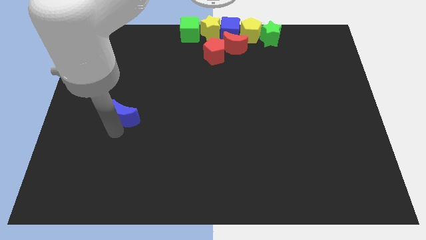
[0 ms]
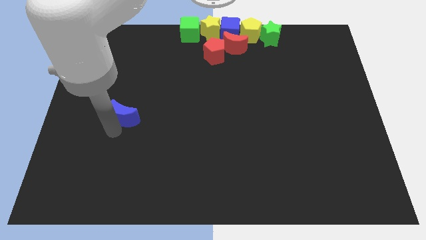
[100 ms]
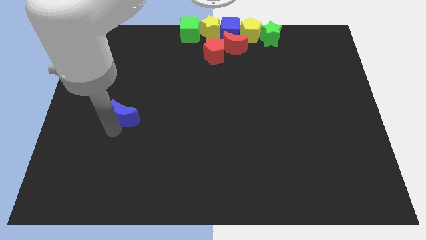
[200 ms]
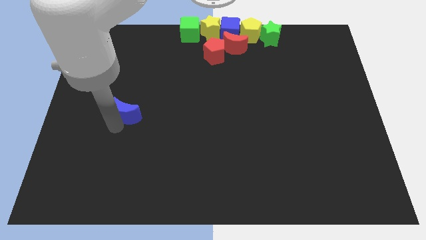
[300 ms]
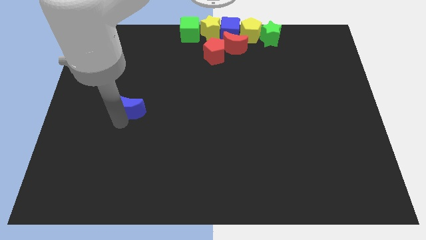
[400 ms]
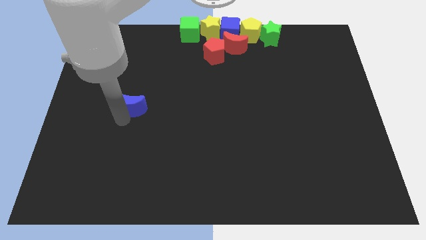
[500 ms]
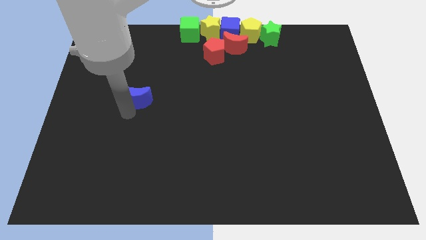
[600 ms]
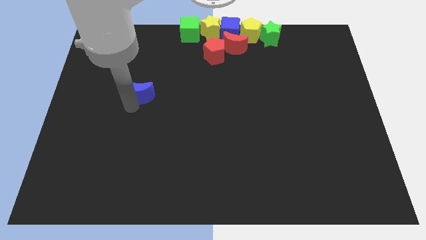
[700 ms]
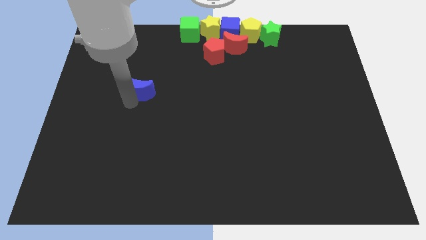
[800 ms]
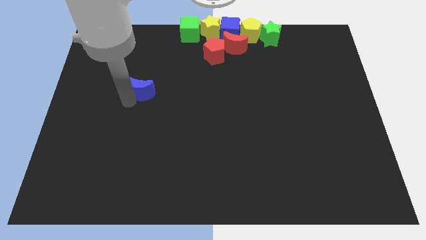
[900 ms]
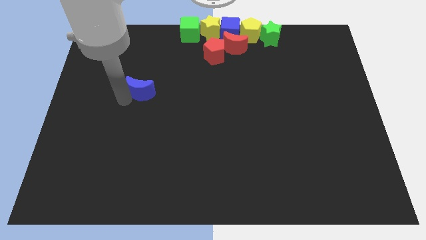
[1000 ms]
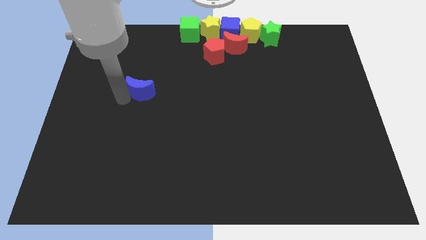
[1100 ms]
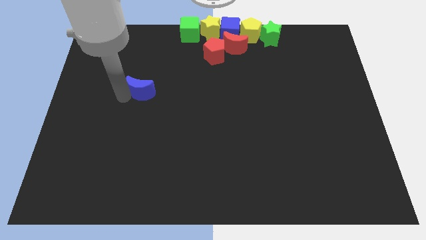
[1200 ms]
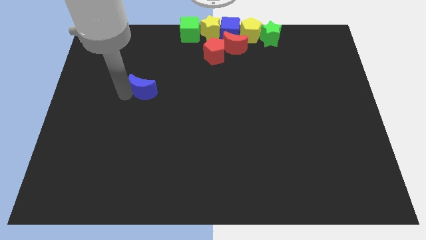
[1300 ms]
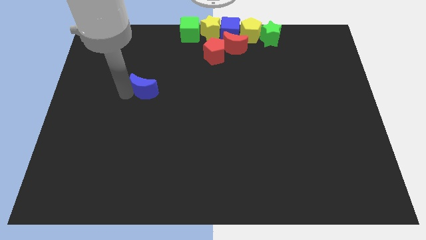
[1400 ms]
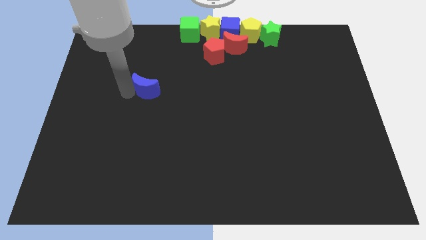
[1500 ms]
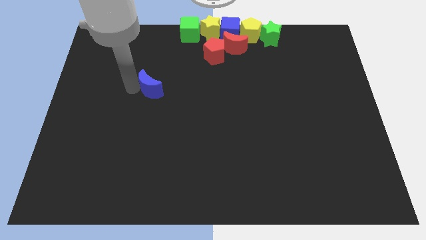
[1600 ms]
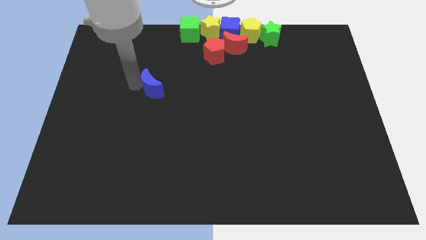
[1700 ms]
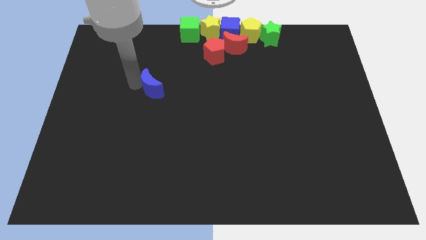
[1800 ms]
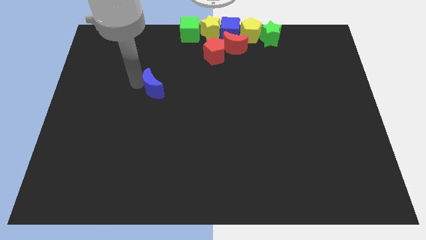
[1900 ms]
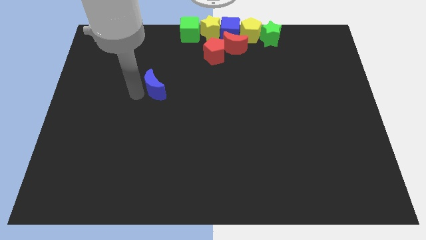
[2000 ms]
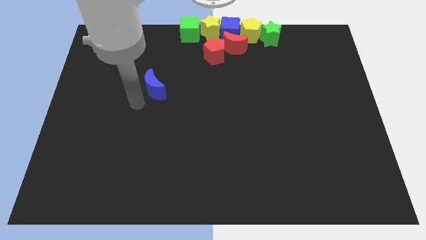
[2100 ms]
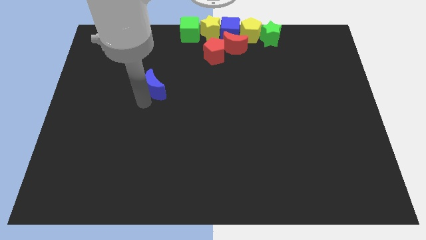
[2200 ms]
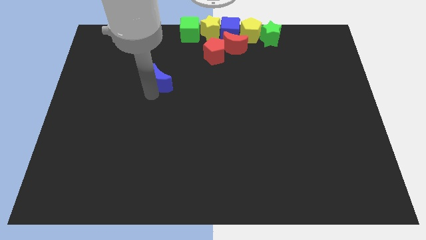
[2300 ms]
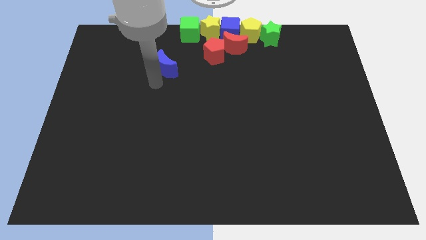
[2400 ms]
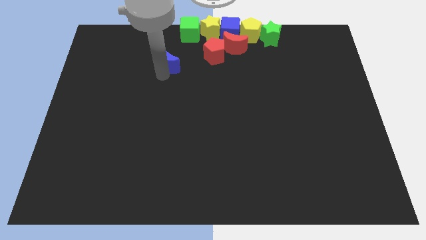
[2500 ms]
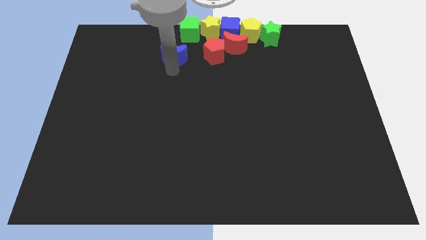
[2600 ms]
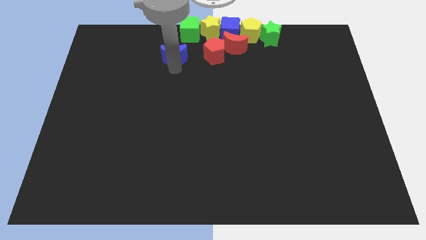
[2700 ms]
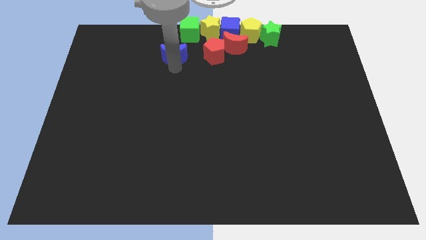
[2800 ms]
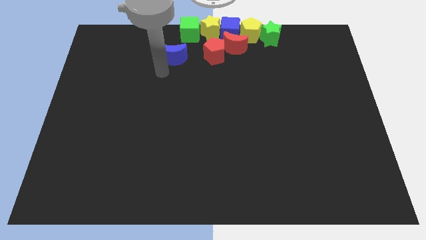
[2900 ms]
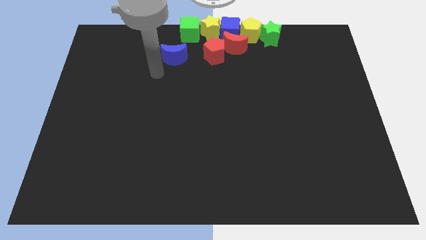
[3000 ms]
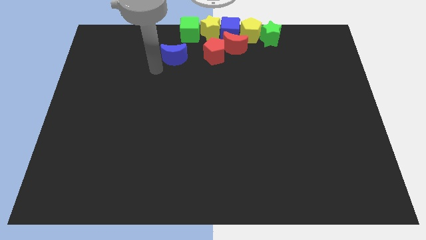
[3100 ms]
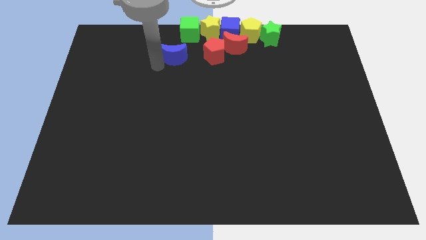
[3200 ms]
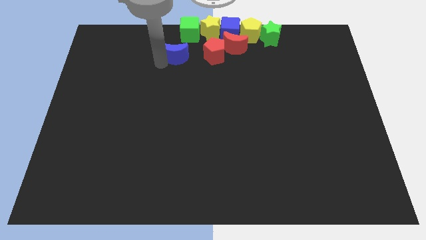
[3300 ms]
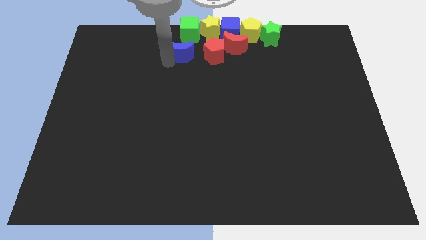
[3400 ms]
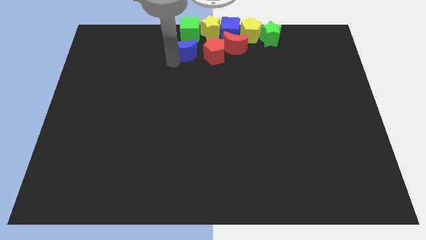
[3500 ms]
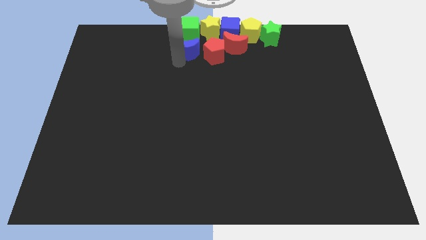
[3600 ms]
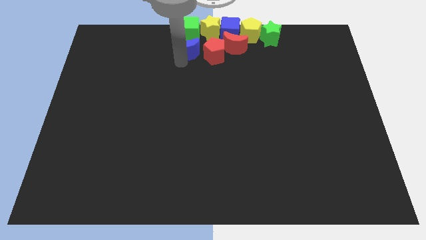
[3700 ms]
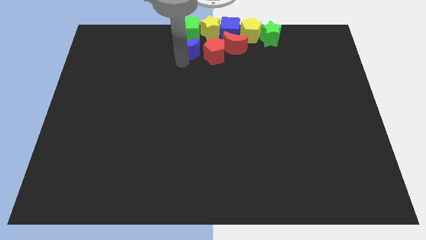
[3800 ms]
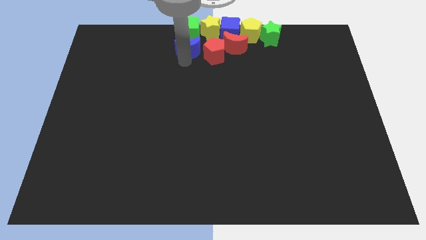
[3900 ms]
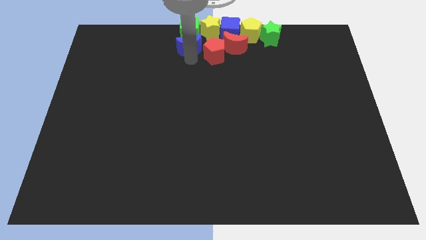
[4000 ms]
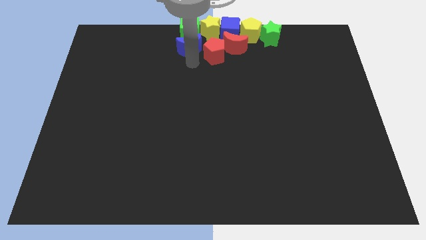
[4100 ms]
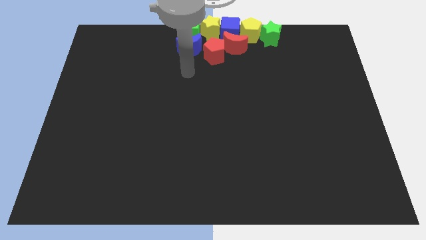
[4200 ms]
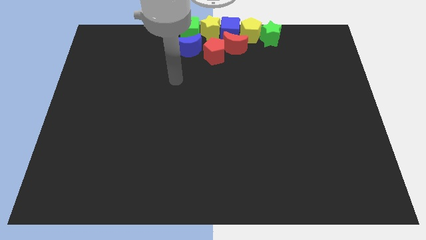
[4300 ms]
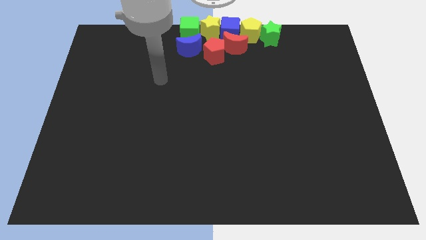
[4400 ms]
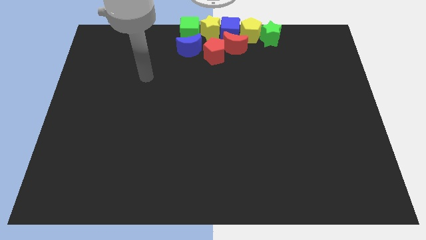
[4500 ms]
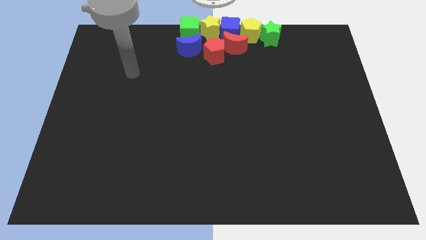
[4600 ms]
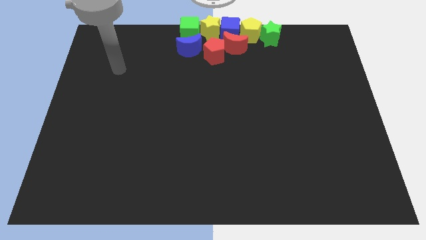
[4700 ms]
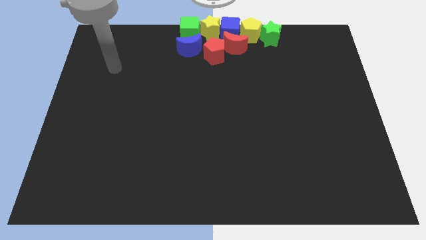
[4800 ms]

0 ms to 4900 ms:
move the blue crescent to the left of the red pentagon

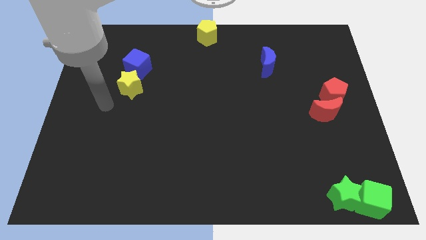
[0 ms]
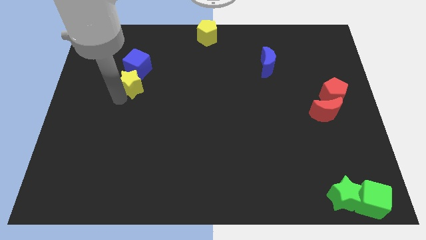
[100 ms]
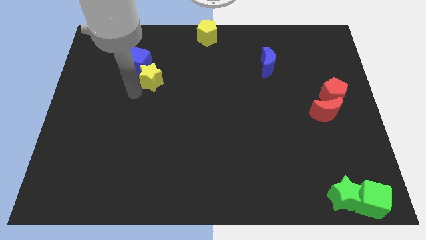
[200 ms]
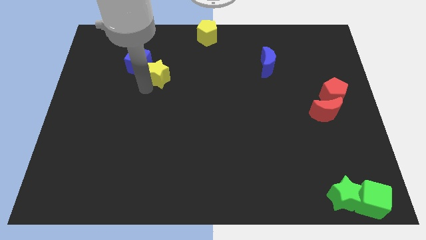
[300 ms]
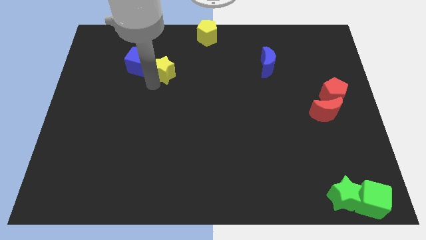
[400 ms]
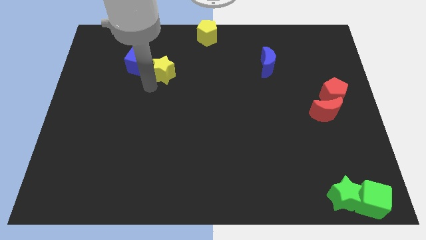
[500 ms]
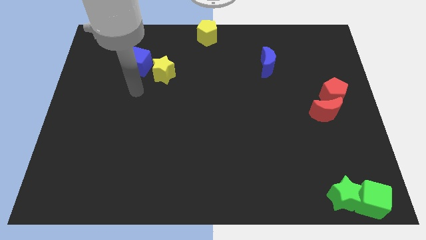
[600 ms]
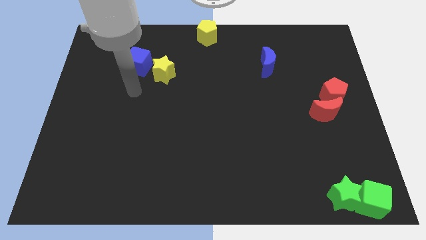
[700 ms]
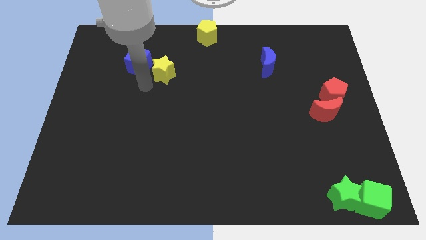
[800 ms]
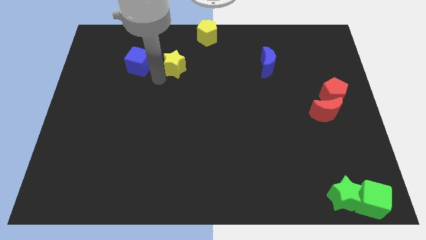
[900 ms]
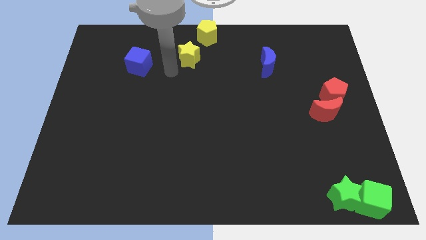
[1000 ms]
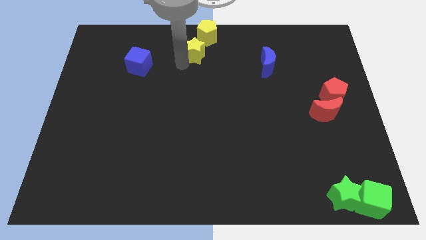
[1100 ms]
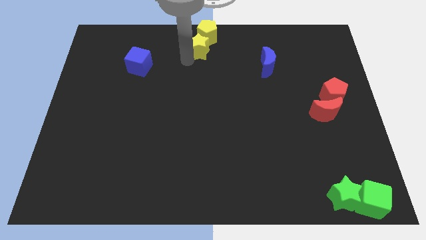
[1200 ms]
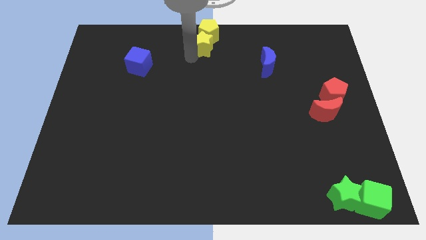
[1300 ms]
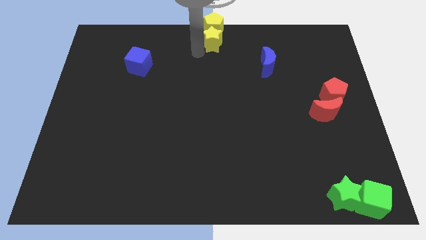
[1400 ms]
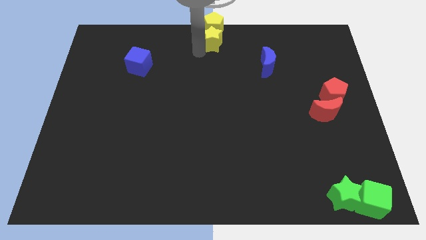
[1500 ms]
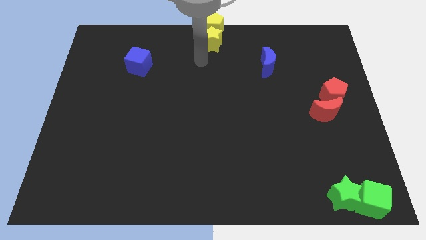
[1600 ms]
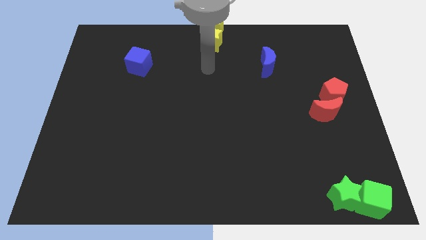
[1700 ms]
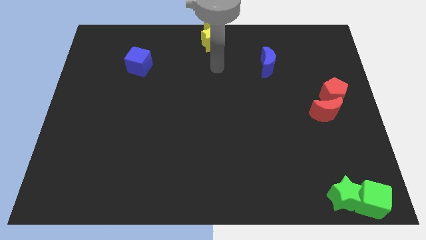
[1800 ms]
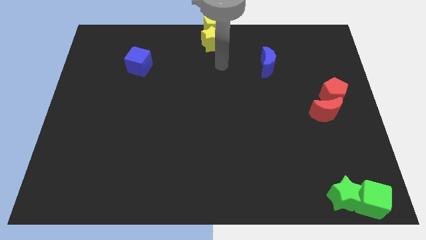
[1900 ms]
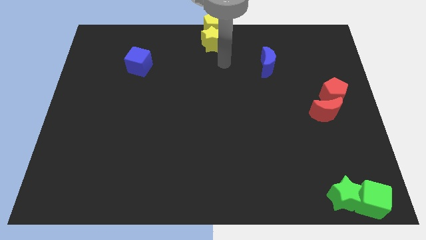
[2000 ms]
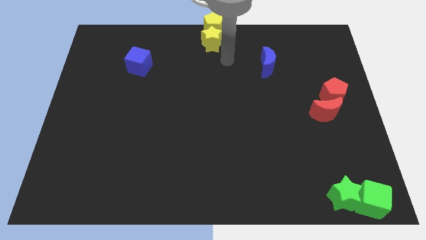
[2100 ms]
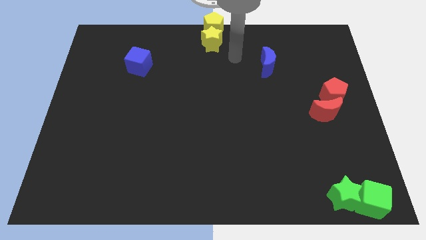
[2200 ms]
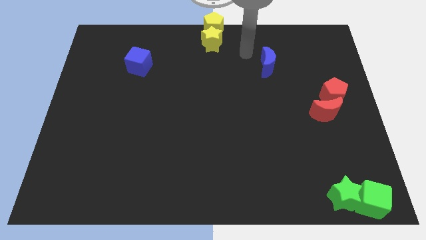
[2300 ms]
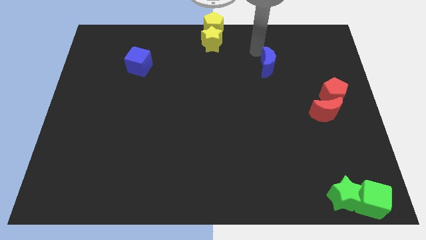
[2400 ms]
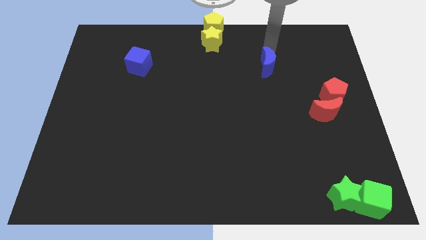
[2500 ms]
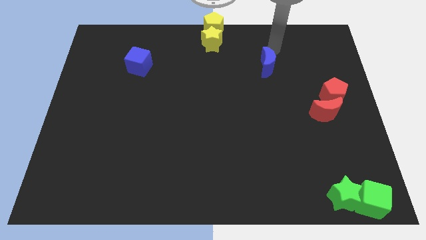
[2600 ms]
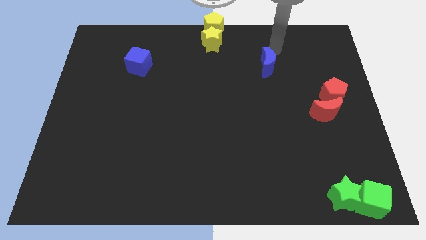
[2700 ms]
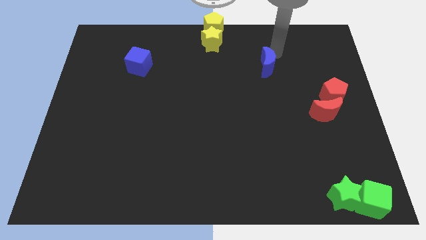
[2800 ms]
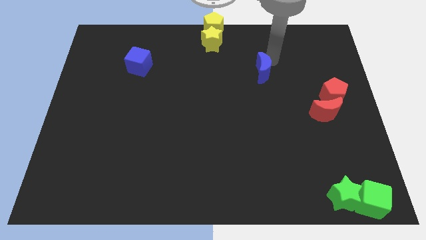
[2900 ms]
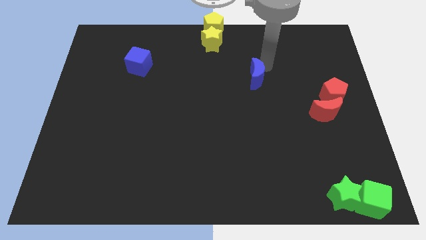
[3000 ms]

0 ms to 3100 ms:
push the yellow star down to the yellow pentagon

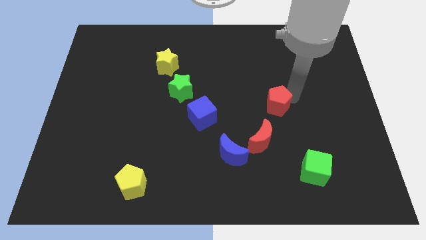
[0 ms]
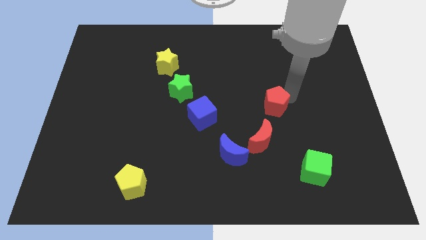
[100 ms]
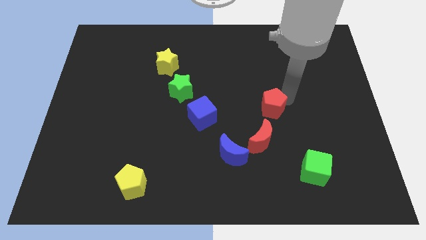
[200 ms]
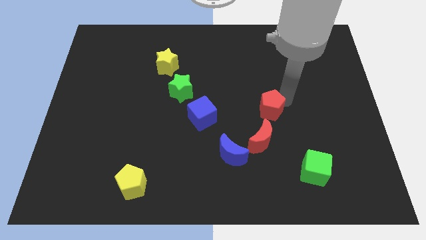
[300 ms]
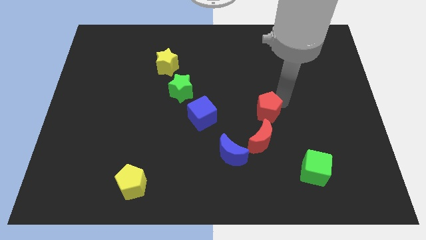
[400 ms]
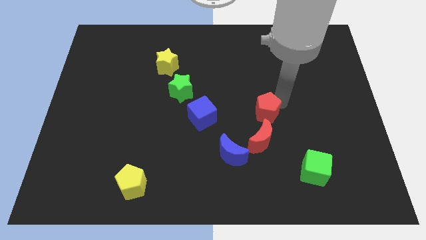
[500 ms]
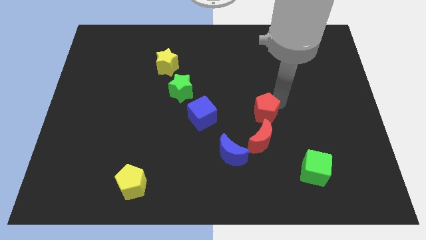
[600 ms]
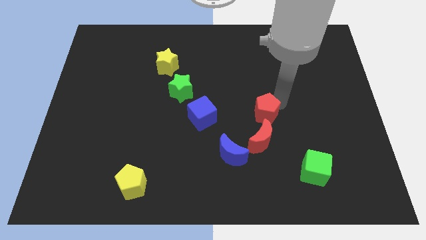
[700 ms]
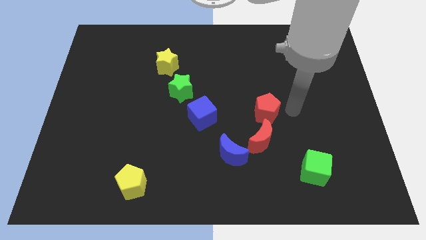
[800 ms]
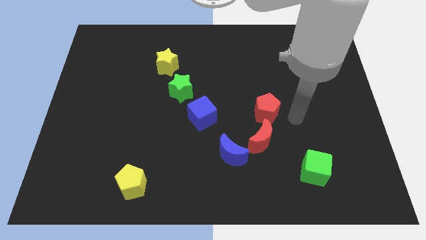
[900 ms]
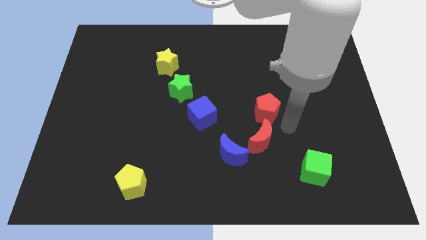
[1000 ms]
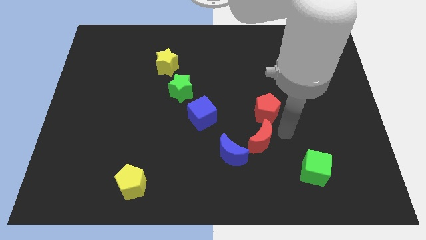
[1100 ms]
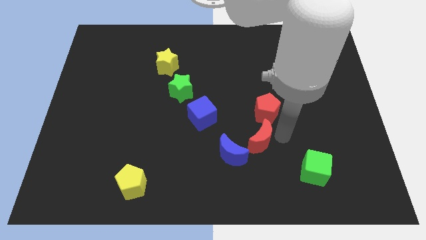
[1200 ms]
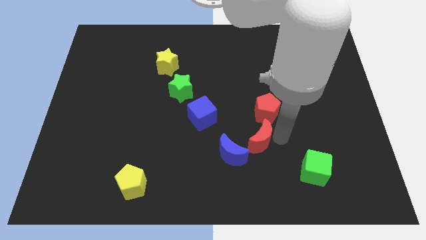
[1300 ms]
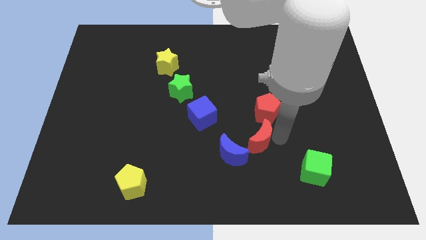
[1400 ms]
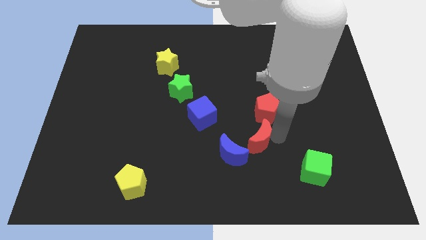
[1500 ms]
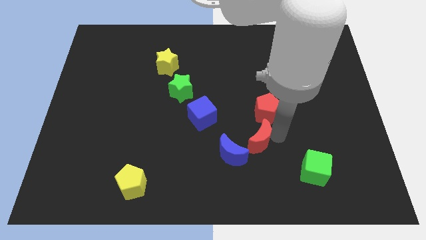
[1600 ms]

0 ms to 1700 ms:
place the red pentagon above the red moon
